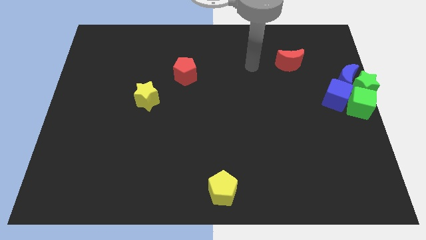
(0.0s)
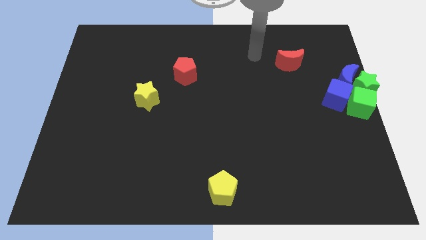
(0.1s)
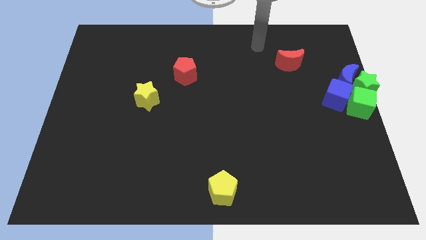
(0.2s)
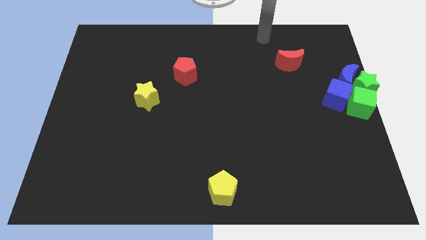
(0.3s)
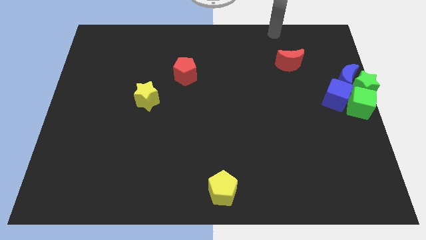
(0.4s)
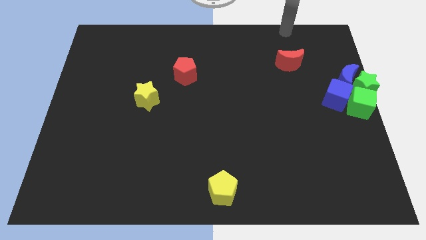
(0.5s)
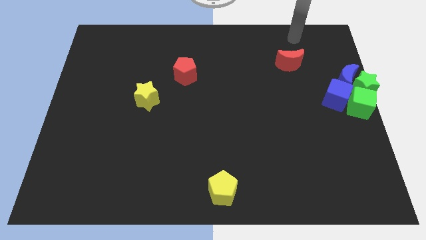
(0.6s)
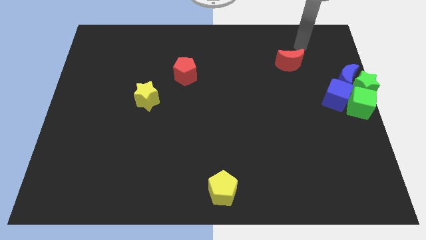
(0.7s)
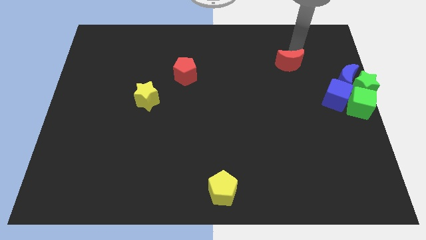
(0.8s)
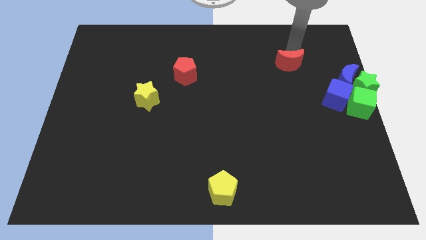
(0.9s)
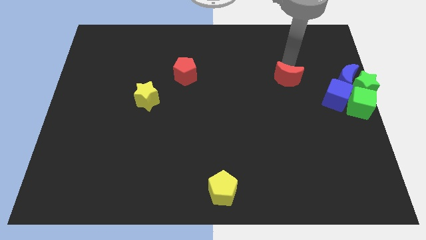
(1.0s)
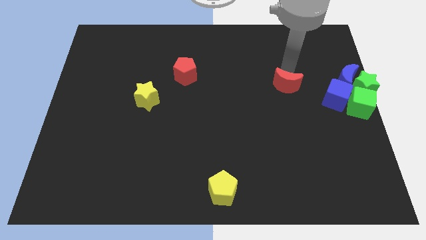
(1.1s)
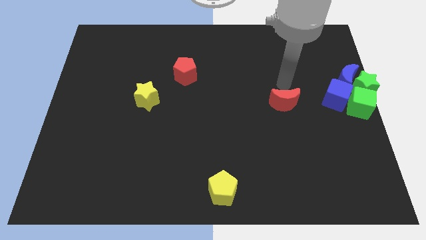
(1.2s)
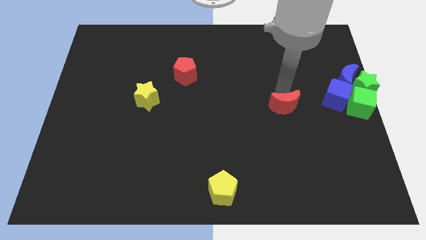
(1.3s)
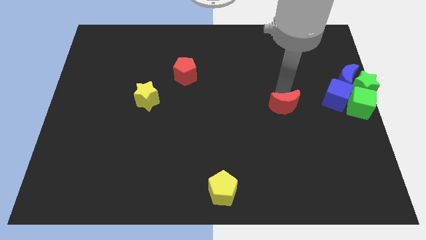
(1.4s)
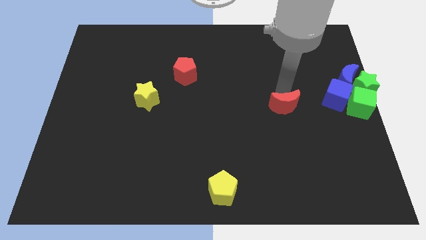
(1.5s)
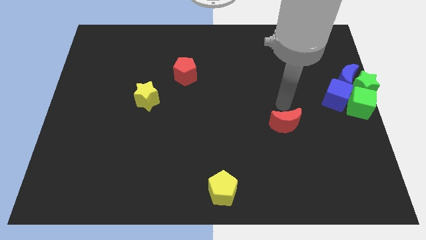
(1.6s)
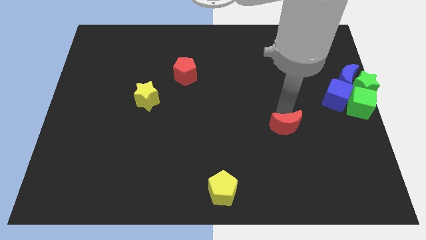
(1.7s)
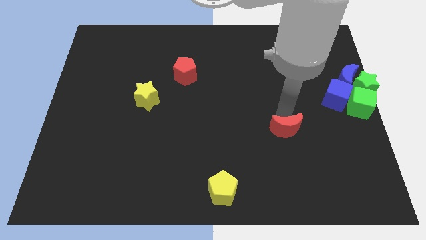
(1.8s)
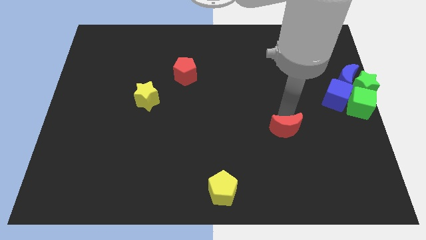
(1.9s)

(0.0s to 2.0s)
slide the red moon towards the bottom of the board

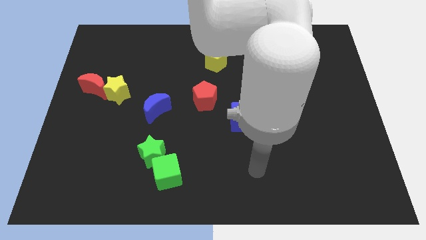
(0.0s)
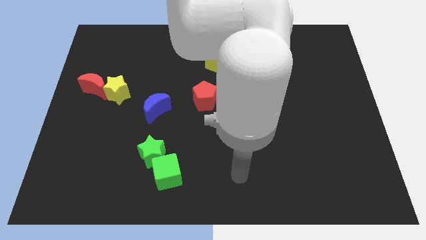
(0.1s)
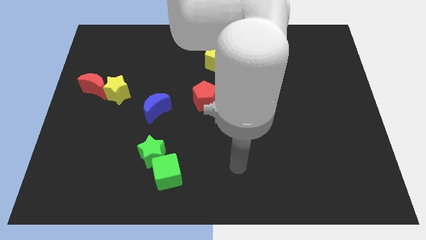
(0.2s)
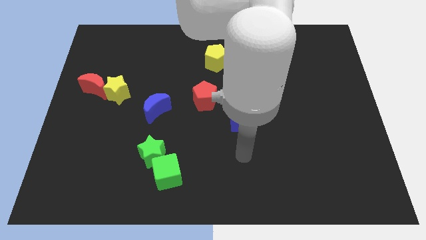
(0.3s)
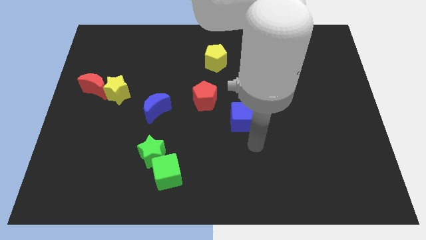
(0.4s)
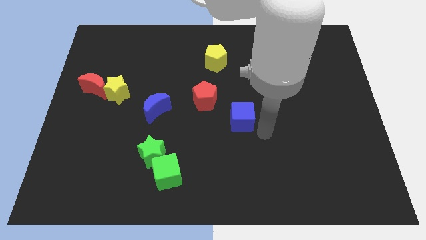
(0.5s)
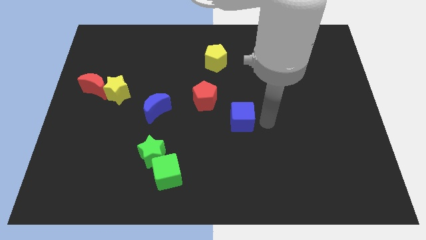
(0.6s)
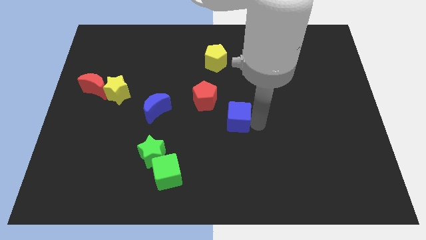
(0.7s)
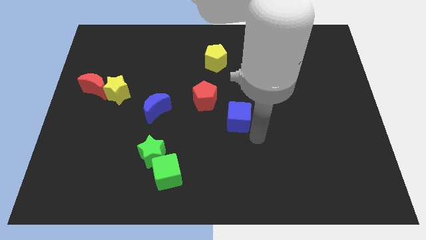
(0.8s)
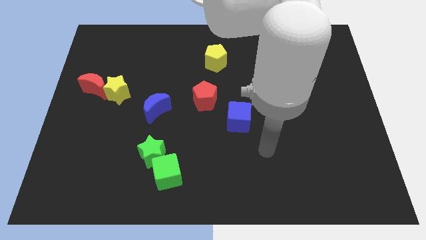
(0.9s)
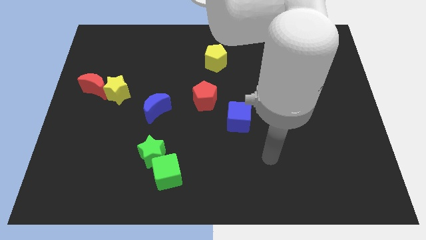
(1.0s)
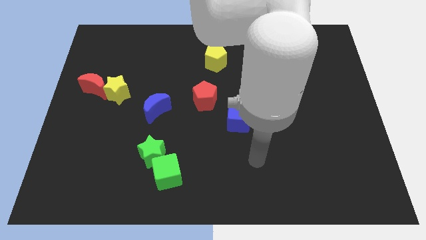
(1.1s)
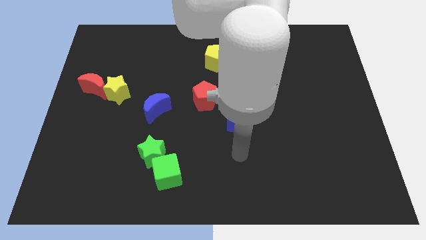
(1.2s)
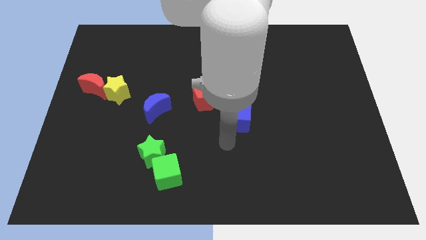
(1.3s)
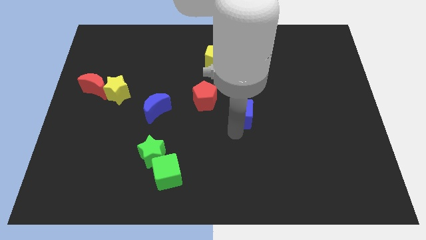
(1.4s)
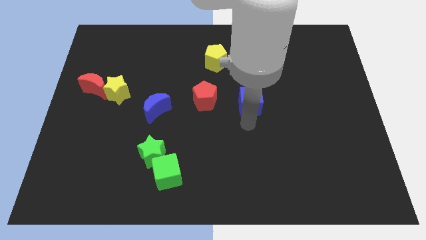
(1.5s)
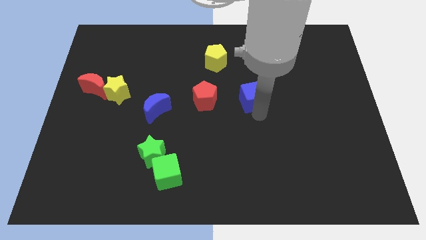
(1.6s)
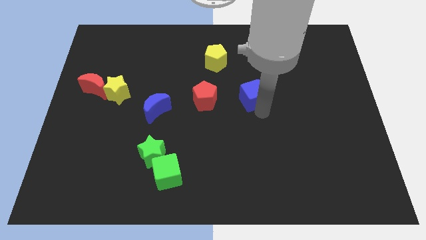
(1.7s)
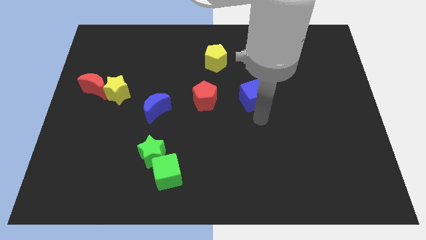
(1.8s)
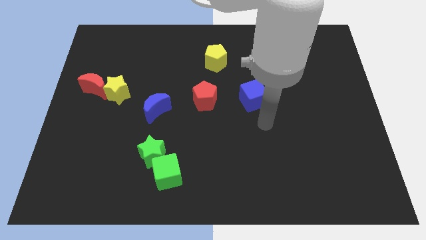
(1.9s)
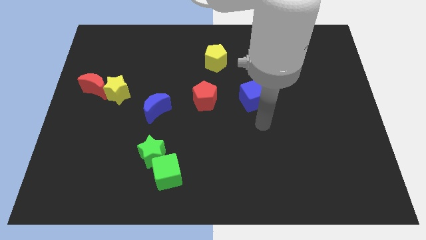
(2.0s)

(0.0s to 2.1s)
place the blue cube to the right side of the red pentagon

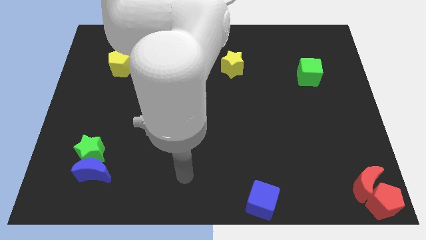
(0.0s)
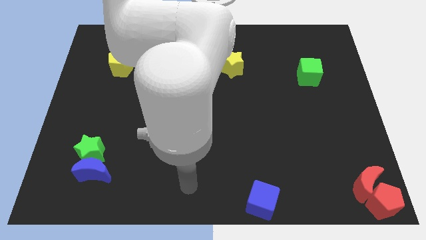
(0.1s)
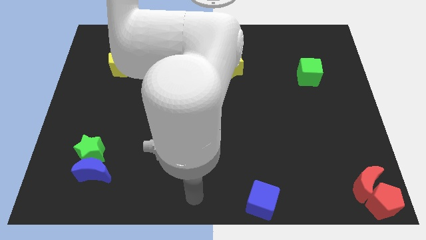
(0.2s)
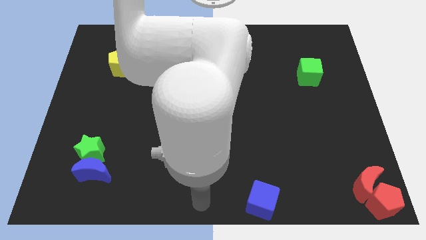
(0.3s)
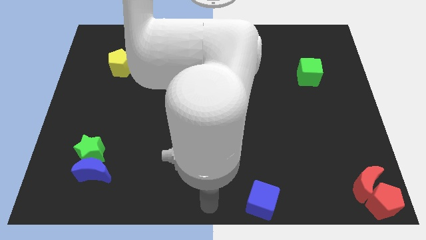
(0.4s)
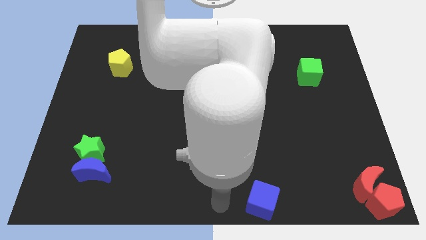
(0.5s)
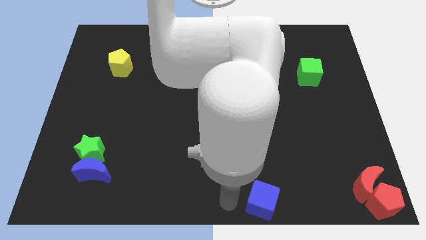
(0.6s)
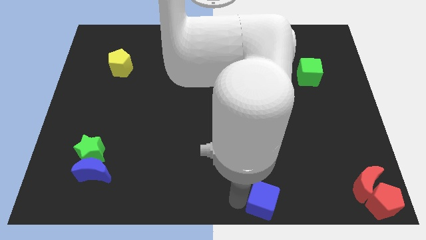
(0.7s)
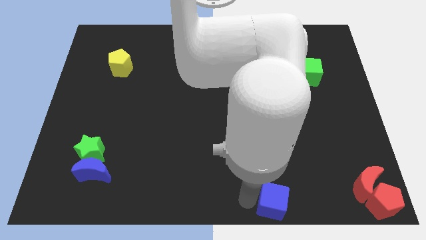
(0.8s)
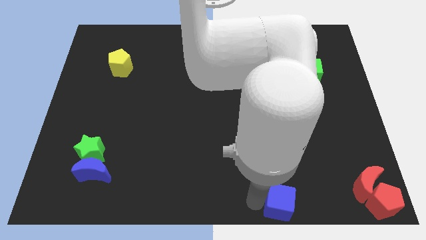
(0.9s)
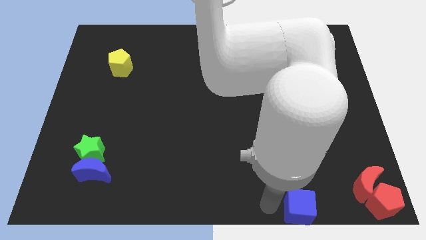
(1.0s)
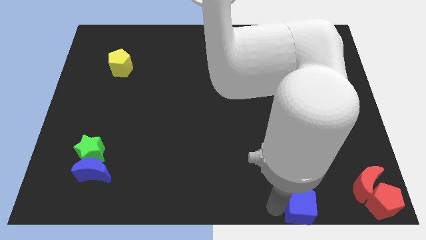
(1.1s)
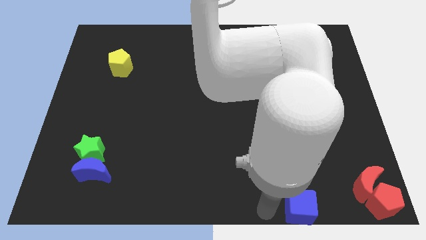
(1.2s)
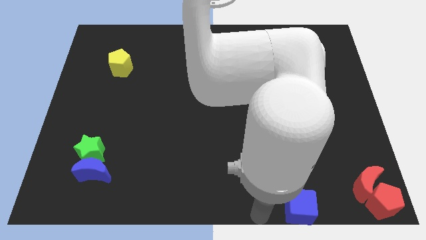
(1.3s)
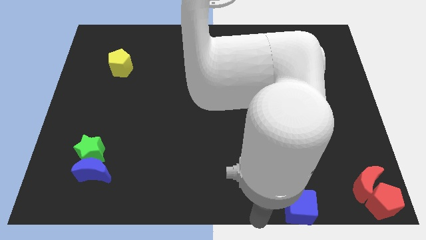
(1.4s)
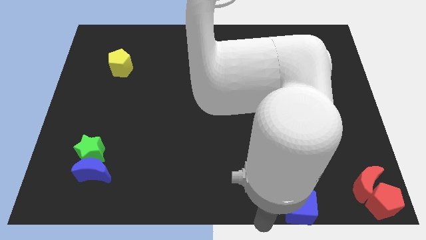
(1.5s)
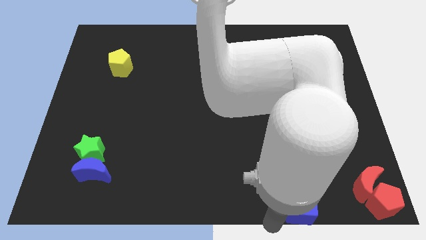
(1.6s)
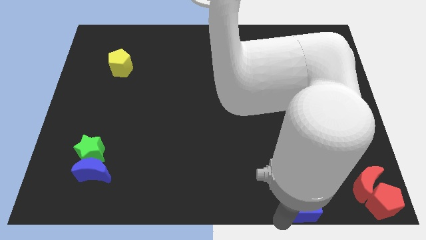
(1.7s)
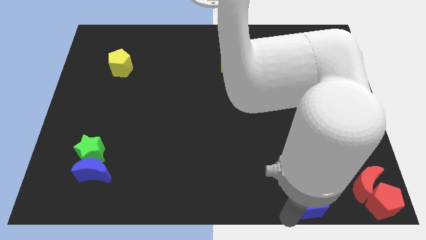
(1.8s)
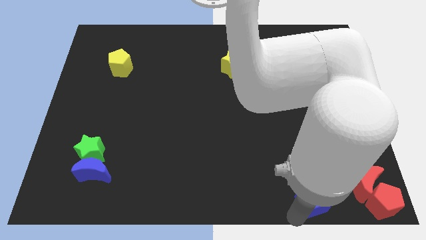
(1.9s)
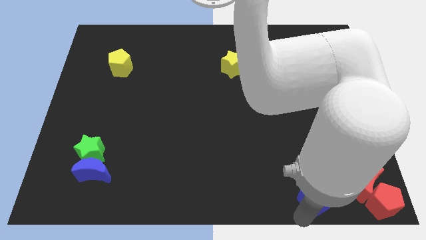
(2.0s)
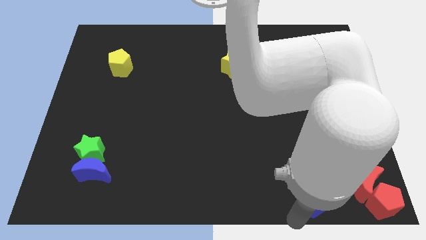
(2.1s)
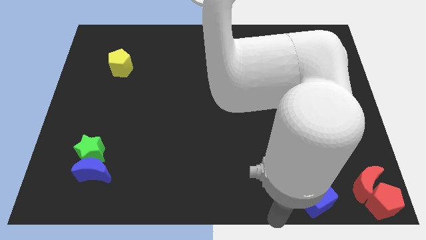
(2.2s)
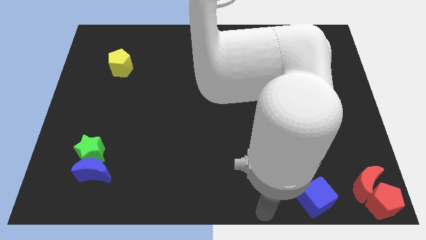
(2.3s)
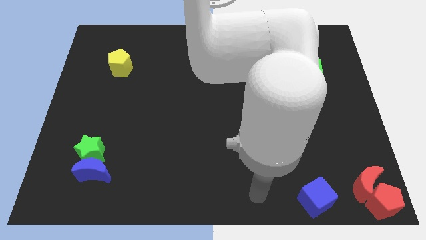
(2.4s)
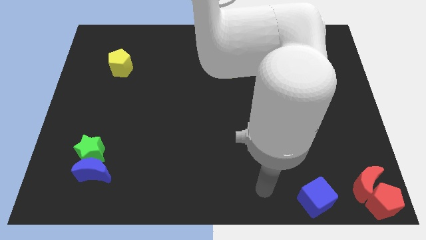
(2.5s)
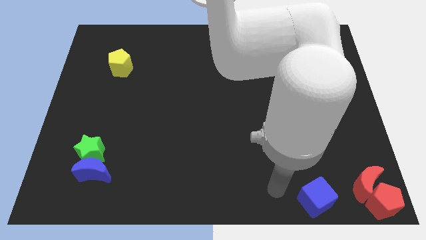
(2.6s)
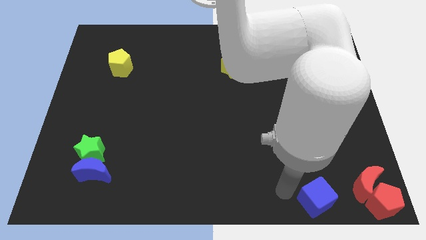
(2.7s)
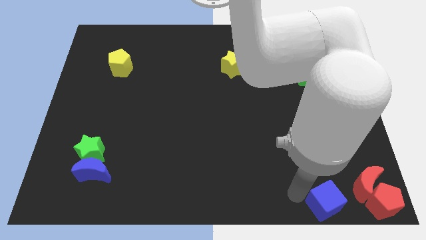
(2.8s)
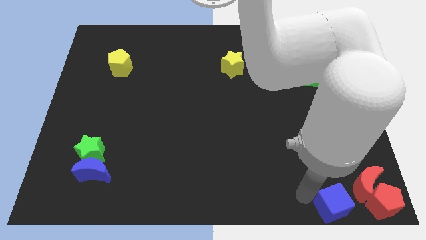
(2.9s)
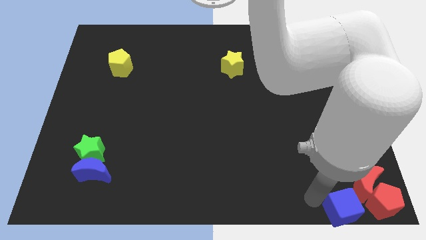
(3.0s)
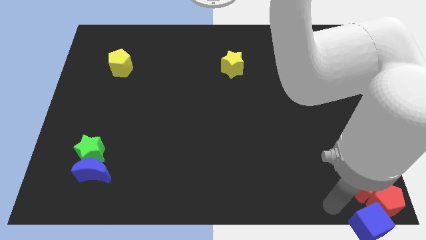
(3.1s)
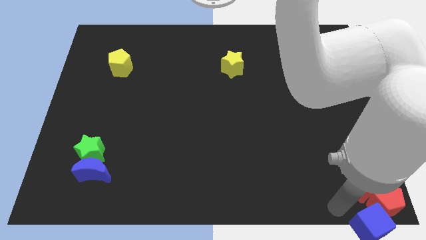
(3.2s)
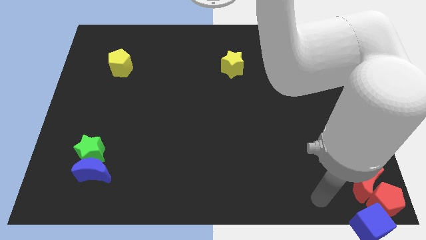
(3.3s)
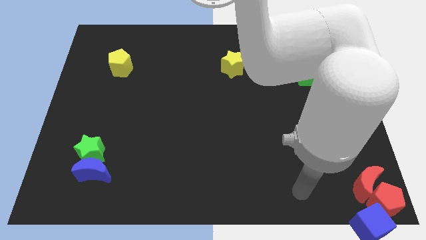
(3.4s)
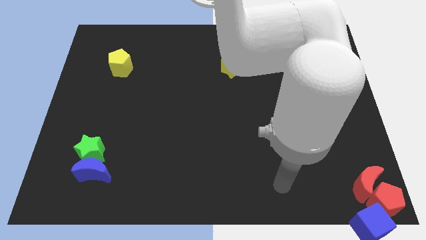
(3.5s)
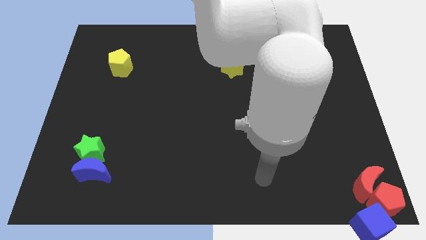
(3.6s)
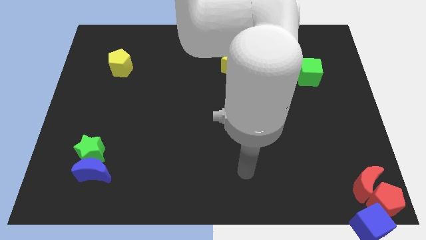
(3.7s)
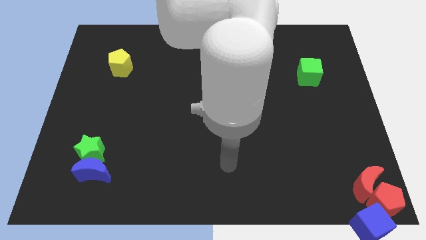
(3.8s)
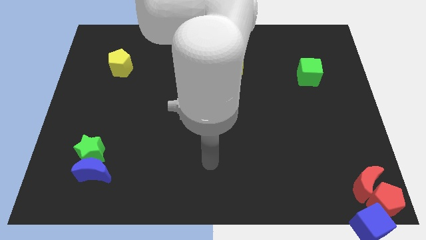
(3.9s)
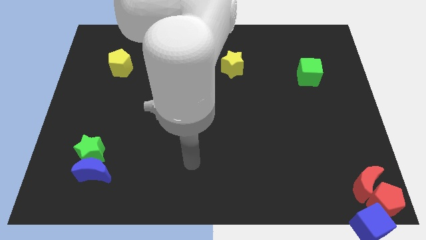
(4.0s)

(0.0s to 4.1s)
move the blue cube to the bottom side of the red pentagon

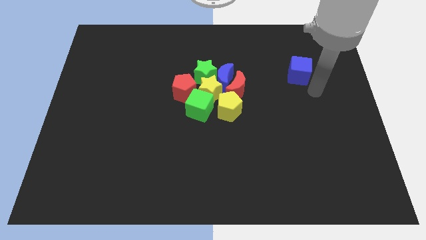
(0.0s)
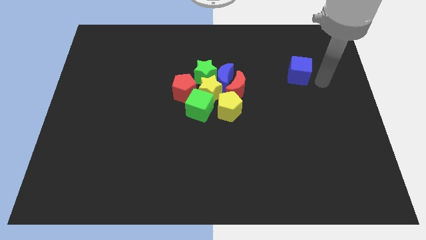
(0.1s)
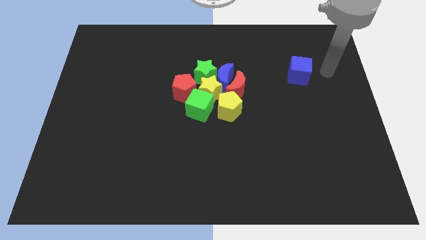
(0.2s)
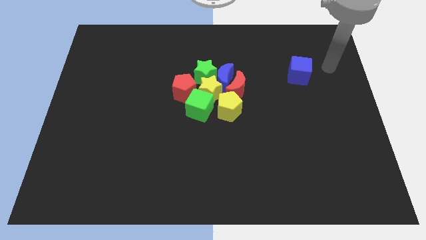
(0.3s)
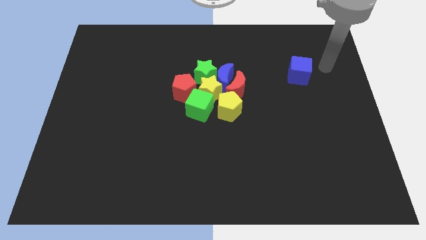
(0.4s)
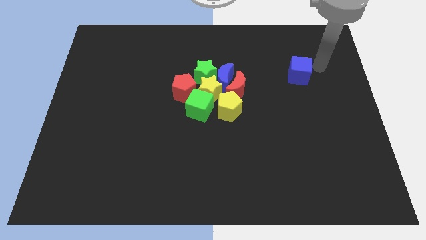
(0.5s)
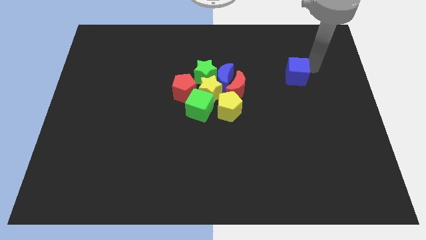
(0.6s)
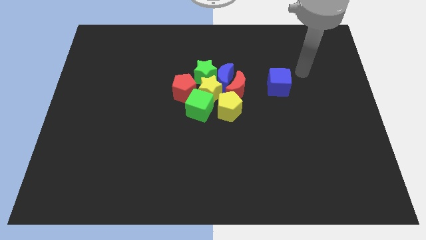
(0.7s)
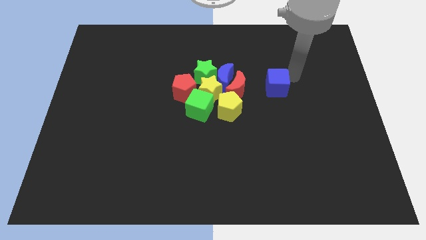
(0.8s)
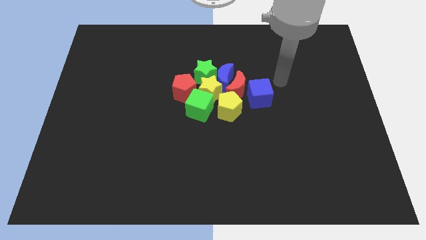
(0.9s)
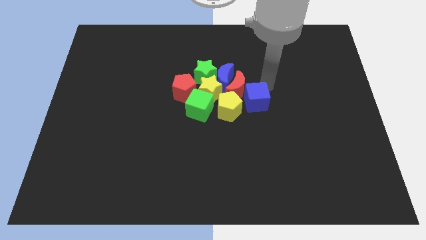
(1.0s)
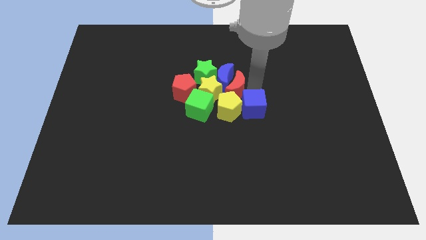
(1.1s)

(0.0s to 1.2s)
push the blue cube into the yellow pentagon
